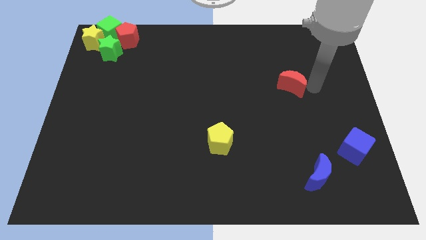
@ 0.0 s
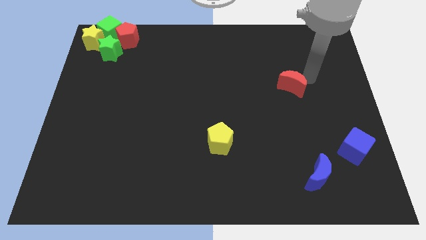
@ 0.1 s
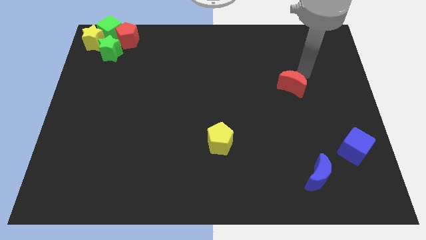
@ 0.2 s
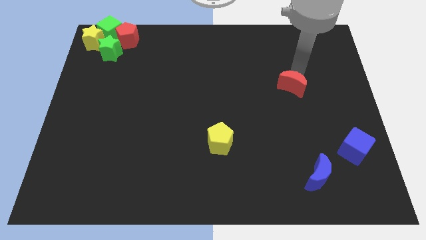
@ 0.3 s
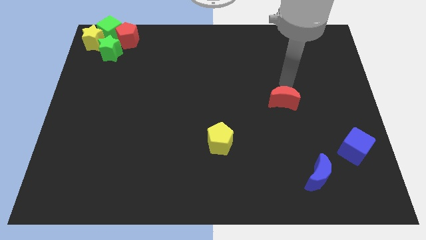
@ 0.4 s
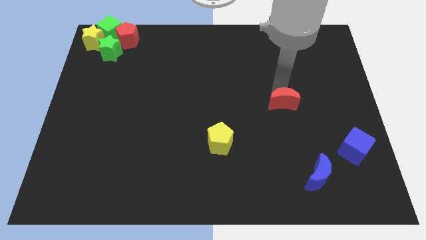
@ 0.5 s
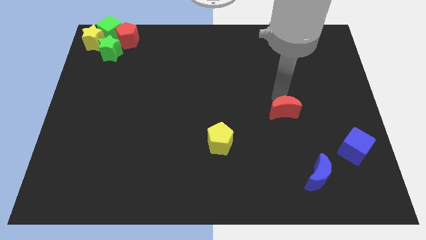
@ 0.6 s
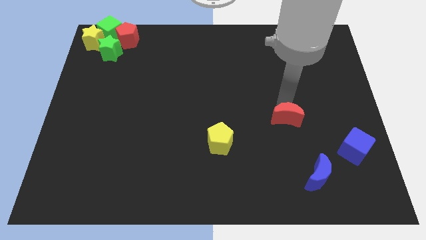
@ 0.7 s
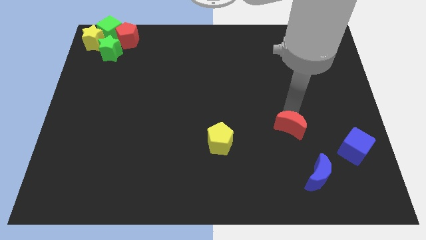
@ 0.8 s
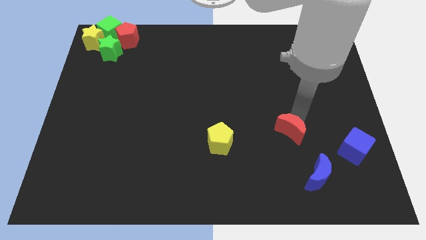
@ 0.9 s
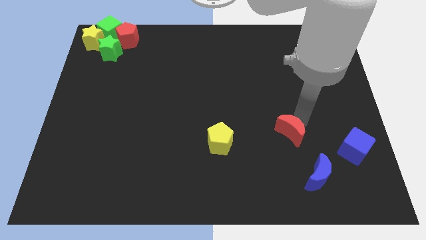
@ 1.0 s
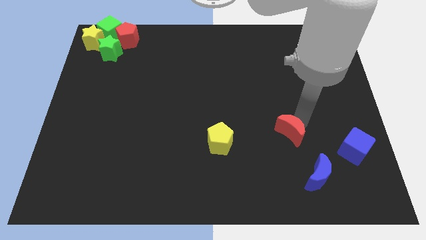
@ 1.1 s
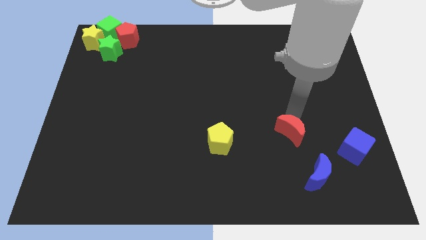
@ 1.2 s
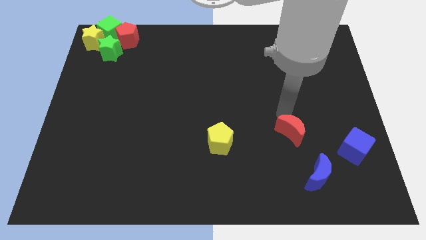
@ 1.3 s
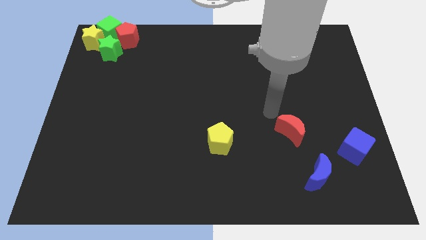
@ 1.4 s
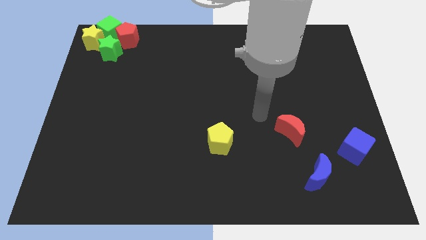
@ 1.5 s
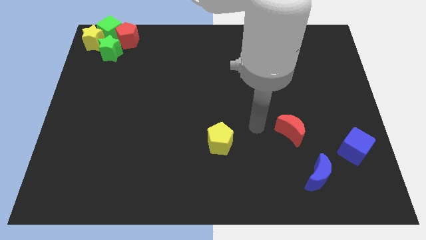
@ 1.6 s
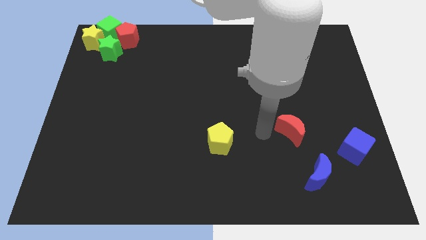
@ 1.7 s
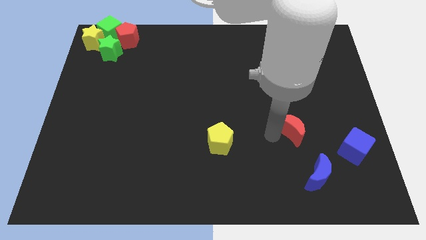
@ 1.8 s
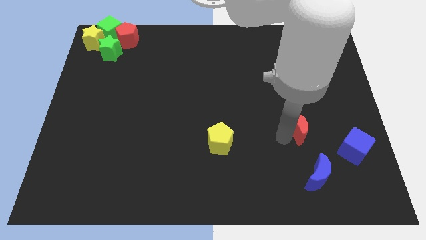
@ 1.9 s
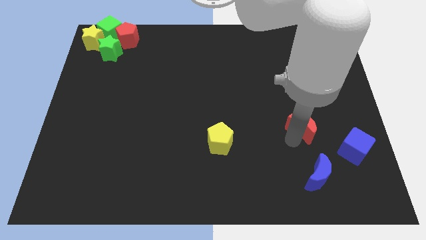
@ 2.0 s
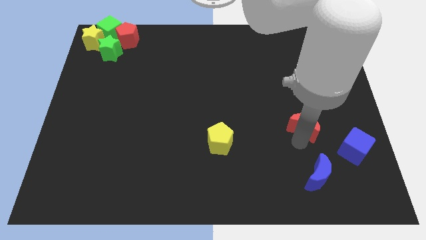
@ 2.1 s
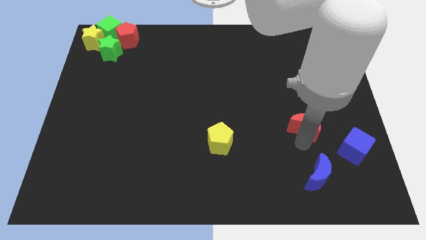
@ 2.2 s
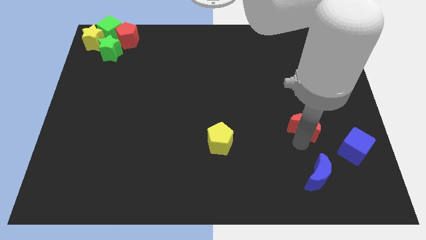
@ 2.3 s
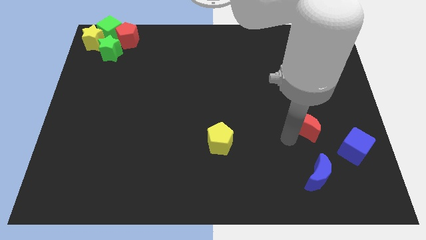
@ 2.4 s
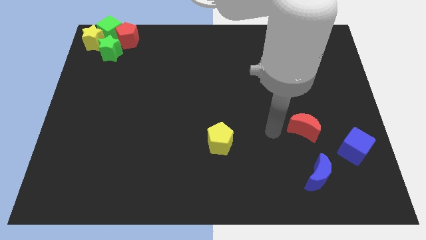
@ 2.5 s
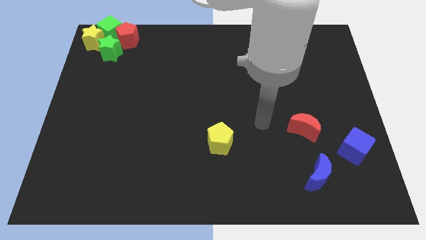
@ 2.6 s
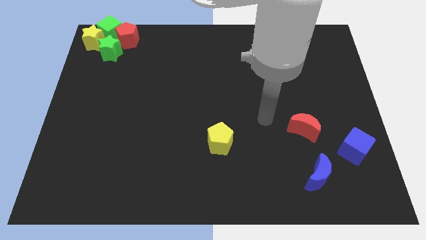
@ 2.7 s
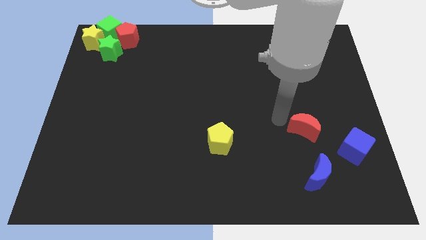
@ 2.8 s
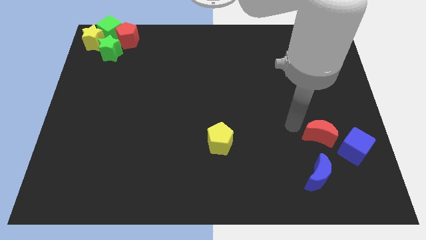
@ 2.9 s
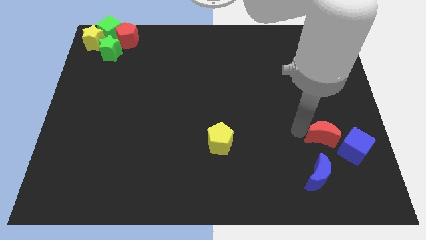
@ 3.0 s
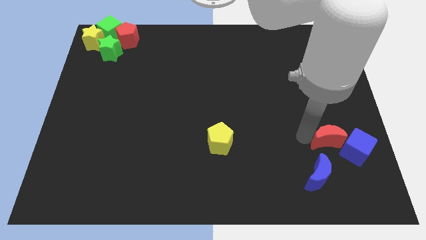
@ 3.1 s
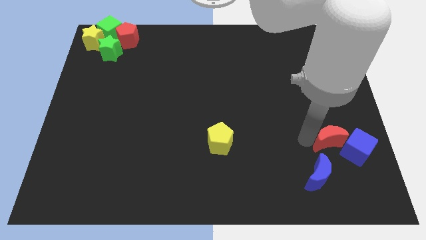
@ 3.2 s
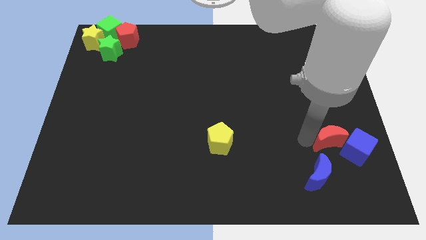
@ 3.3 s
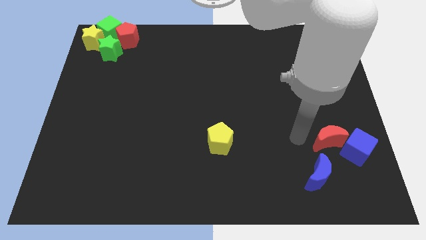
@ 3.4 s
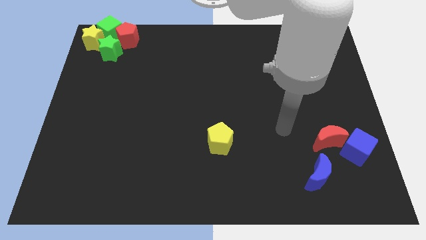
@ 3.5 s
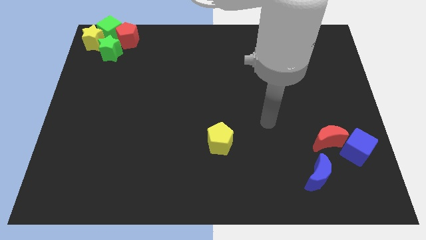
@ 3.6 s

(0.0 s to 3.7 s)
push the red moon into the blue cube

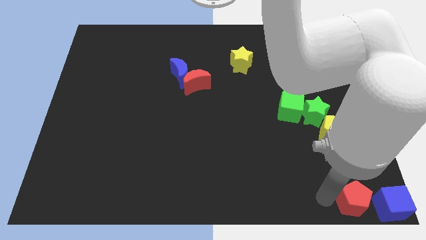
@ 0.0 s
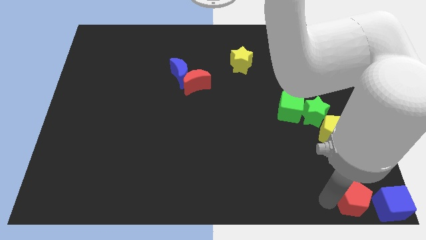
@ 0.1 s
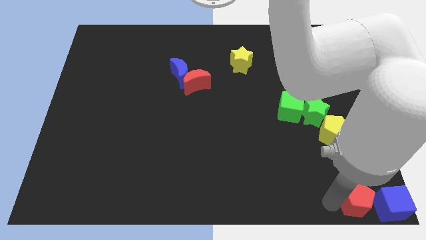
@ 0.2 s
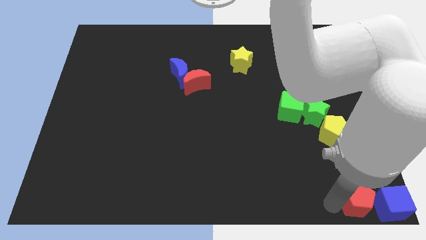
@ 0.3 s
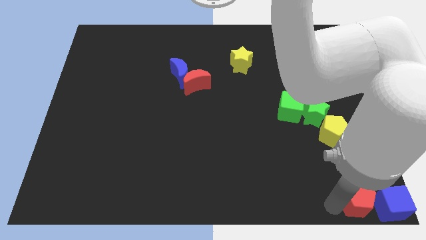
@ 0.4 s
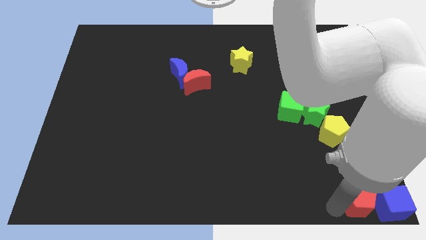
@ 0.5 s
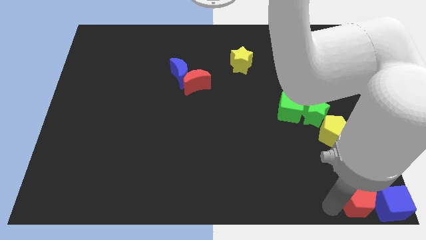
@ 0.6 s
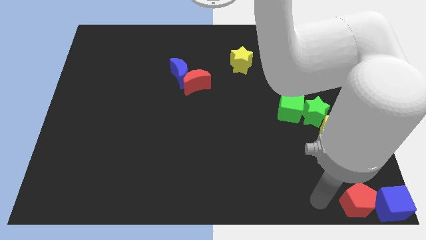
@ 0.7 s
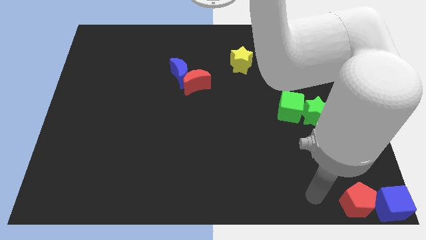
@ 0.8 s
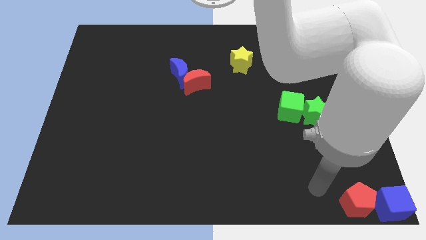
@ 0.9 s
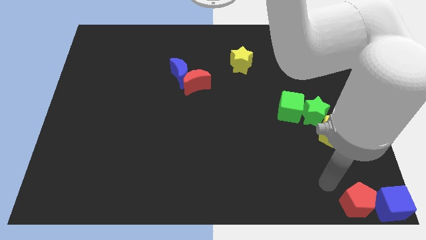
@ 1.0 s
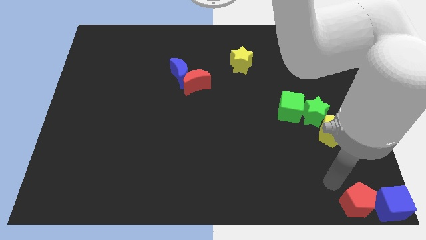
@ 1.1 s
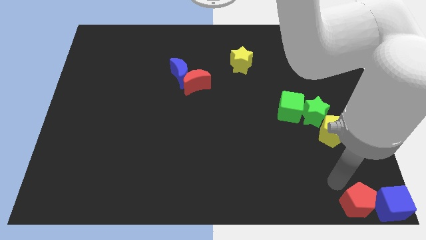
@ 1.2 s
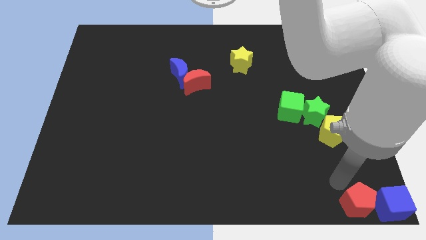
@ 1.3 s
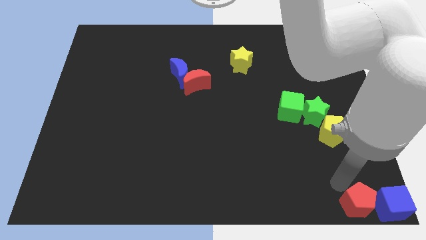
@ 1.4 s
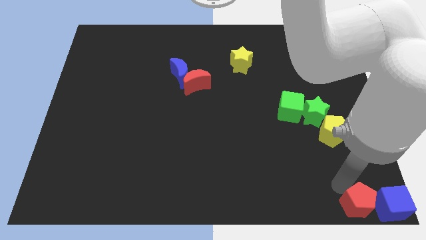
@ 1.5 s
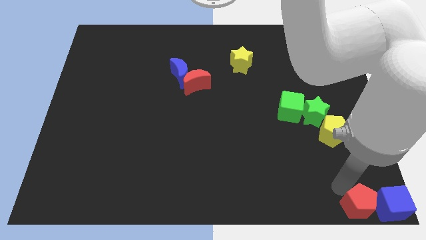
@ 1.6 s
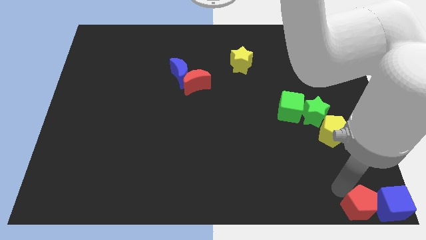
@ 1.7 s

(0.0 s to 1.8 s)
push the red pentagon close to the blue cube

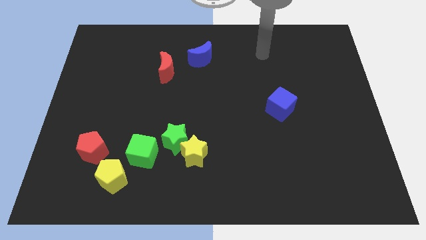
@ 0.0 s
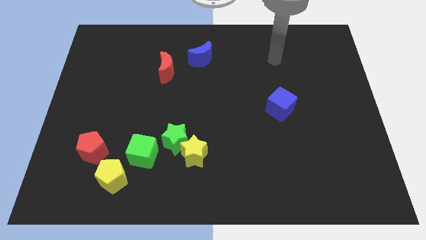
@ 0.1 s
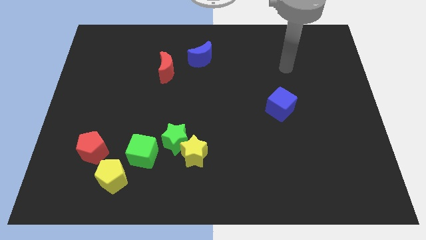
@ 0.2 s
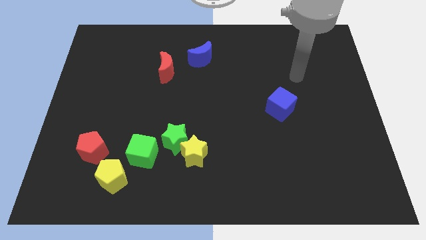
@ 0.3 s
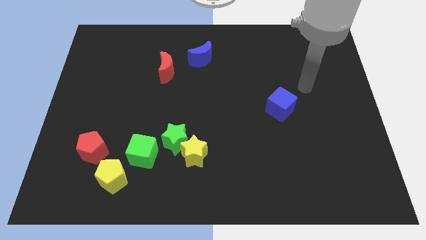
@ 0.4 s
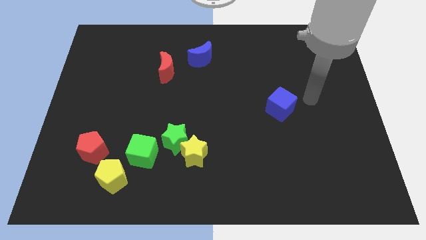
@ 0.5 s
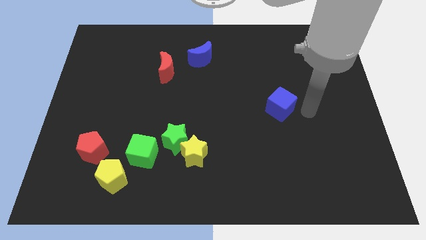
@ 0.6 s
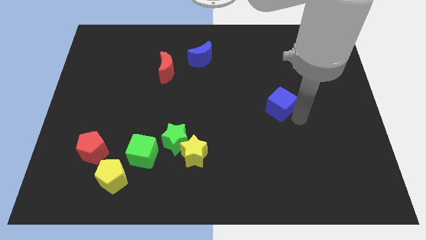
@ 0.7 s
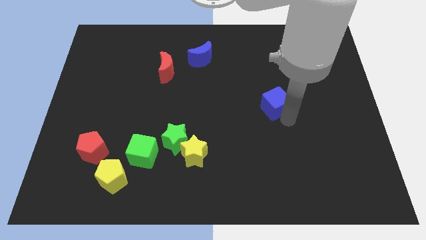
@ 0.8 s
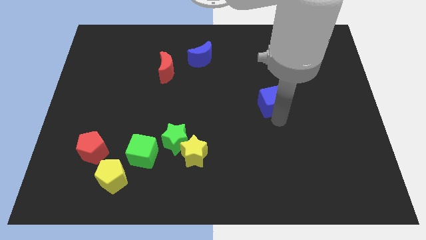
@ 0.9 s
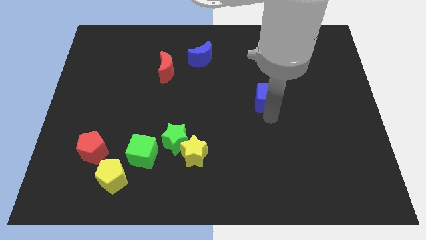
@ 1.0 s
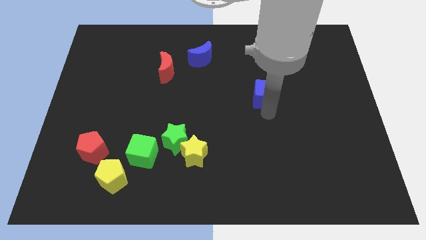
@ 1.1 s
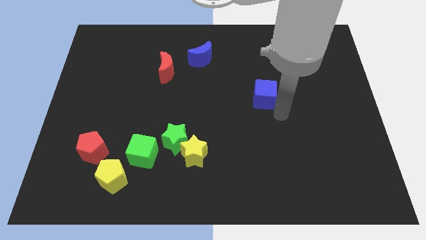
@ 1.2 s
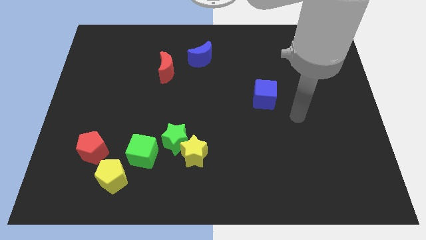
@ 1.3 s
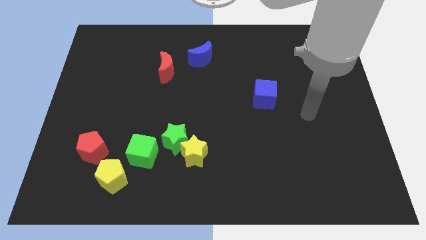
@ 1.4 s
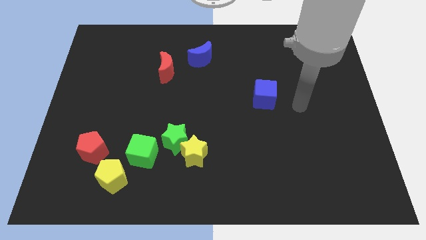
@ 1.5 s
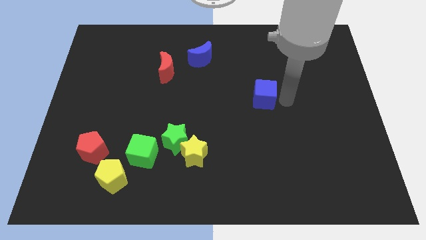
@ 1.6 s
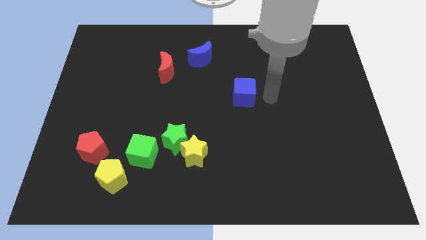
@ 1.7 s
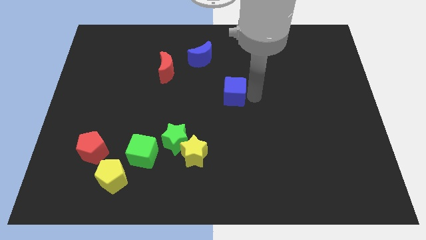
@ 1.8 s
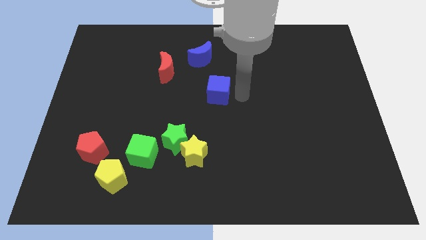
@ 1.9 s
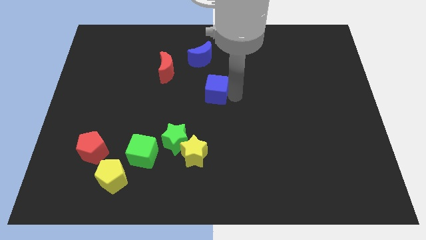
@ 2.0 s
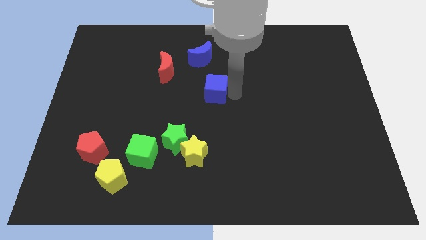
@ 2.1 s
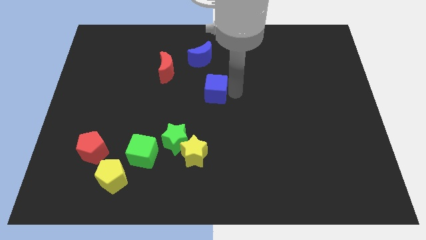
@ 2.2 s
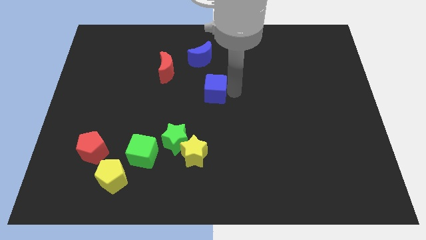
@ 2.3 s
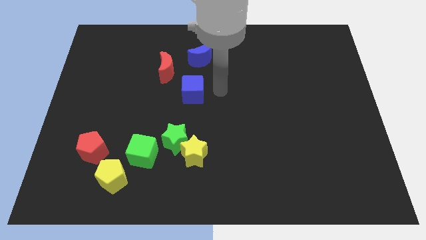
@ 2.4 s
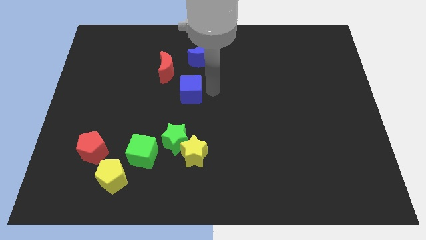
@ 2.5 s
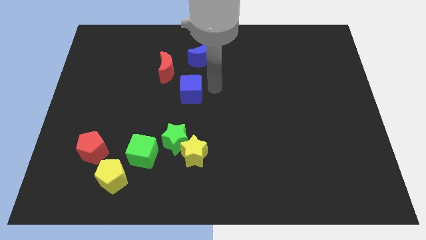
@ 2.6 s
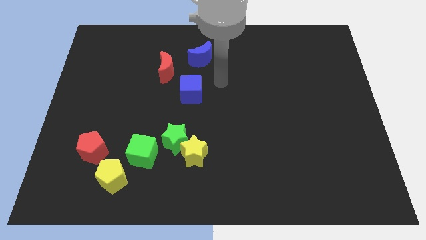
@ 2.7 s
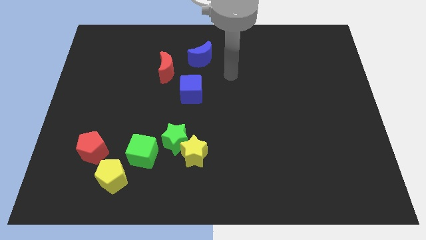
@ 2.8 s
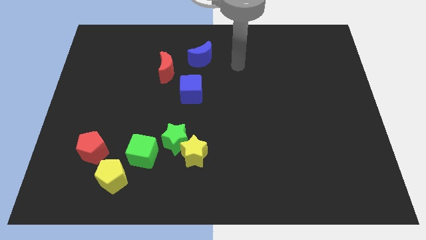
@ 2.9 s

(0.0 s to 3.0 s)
move the blue cube to the bottom right of the red crescent

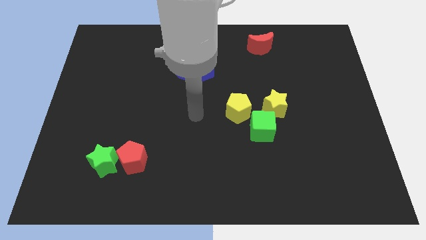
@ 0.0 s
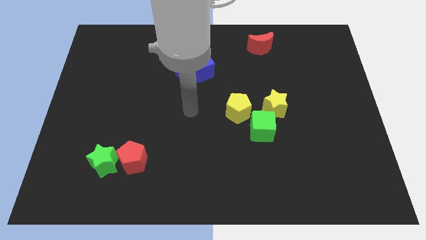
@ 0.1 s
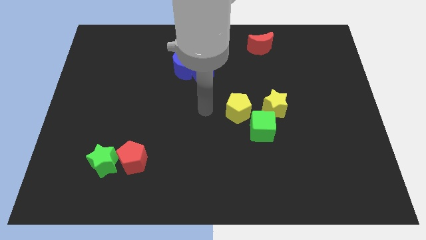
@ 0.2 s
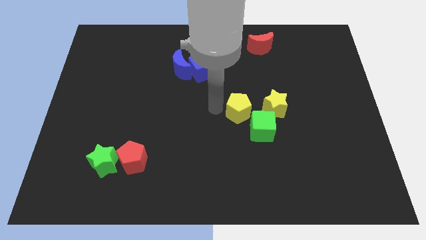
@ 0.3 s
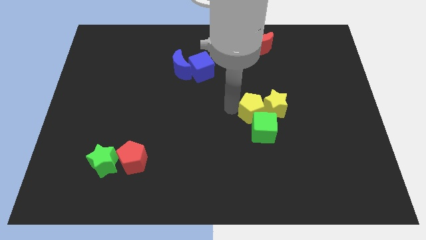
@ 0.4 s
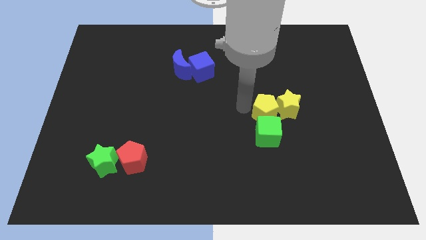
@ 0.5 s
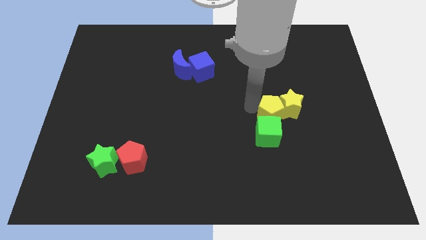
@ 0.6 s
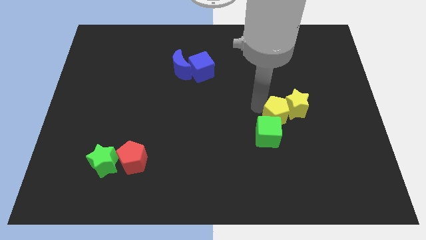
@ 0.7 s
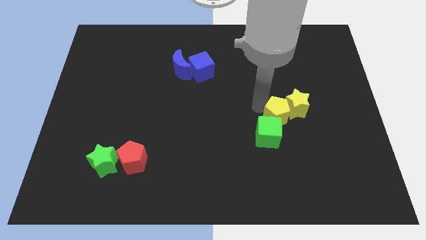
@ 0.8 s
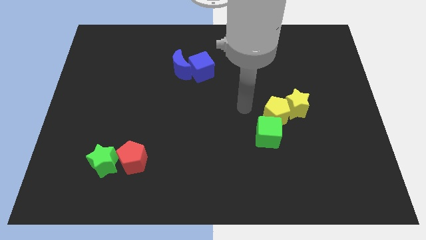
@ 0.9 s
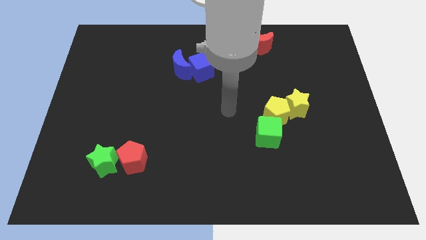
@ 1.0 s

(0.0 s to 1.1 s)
push the yellow pentagon into the yellow star
